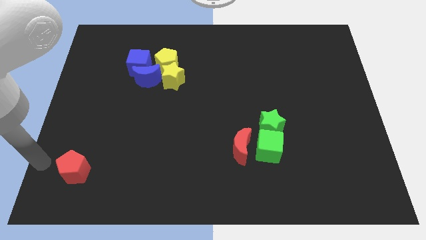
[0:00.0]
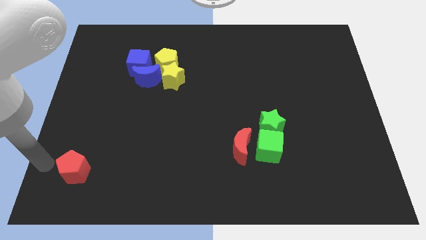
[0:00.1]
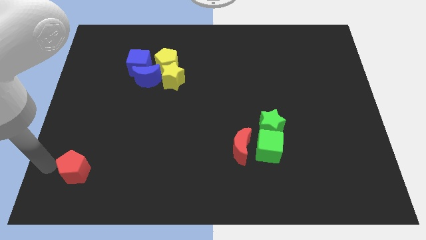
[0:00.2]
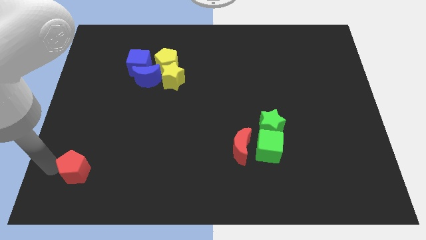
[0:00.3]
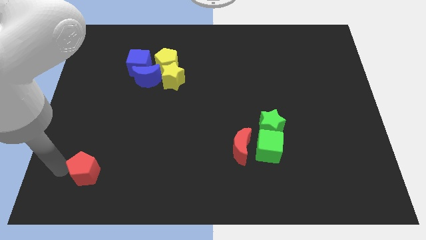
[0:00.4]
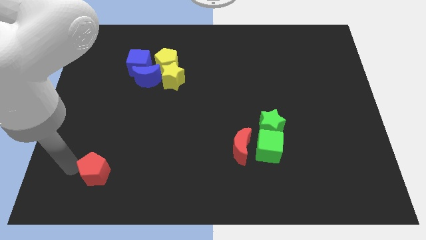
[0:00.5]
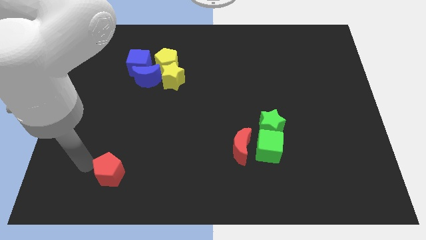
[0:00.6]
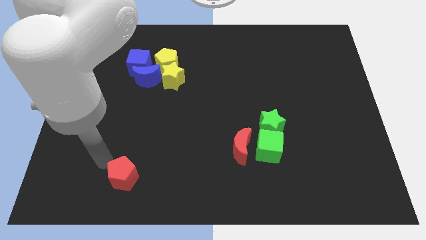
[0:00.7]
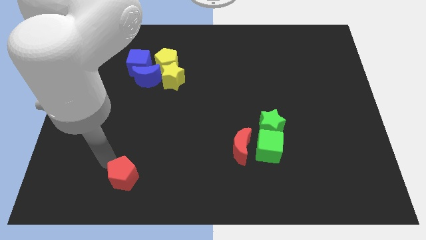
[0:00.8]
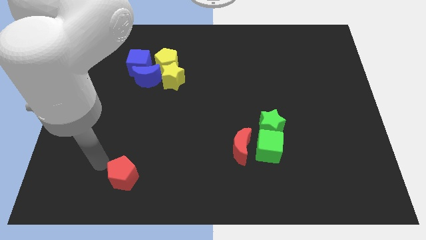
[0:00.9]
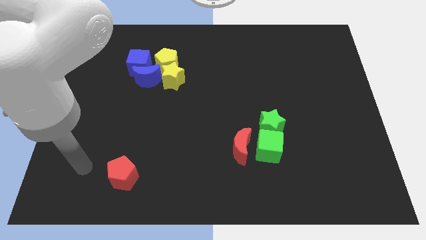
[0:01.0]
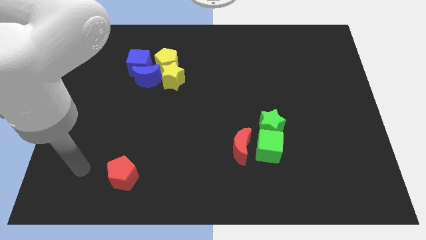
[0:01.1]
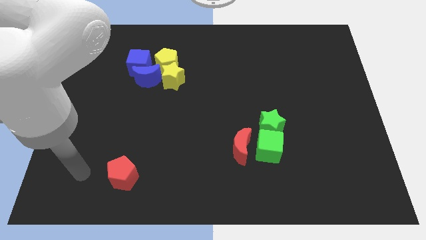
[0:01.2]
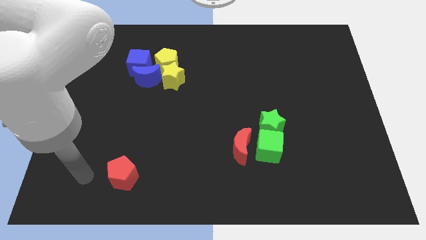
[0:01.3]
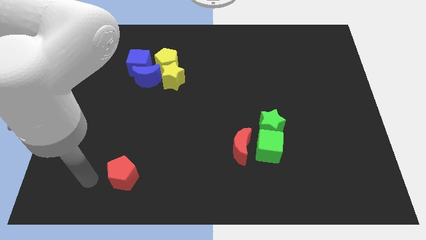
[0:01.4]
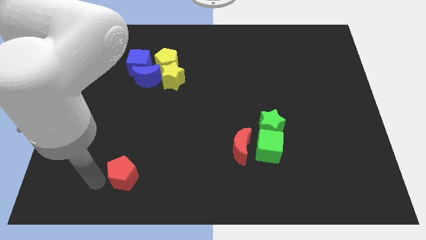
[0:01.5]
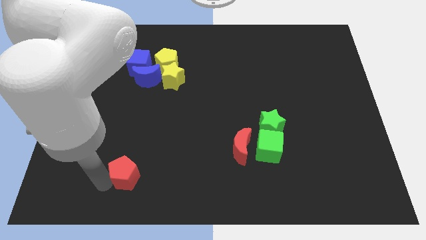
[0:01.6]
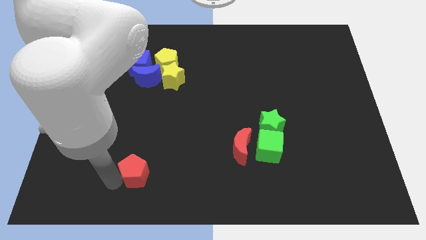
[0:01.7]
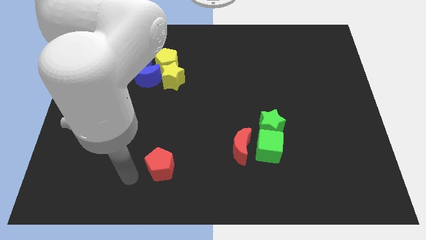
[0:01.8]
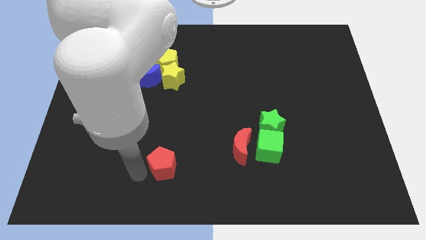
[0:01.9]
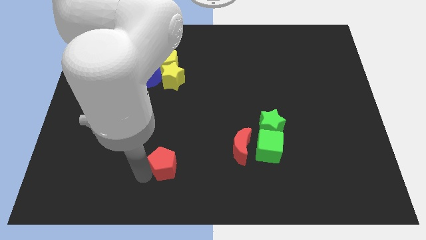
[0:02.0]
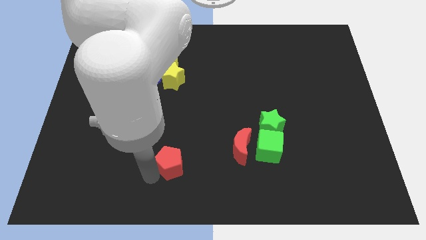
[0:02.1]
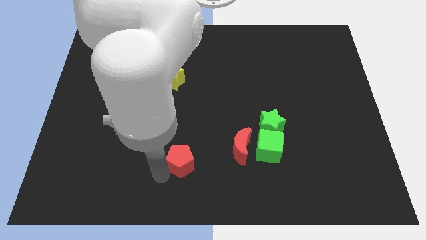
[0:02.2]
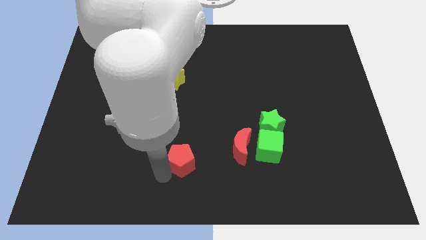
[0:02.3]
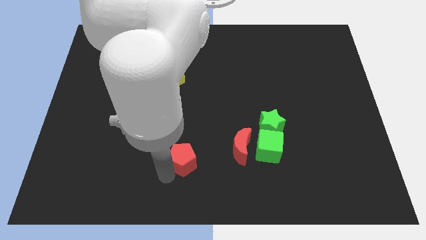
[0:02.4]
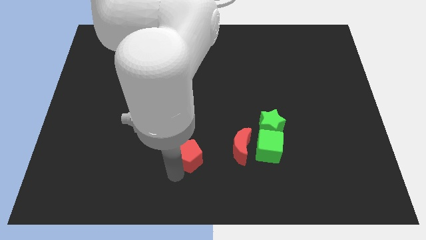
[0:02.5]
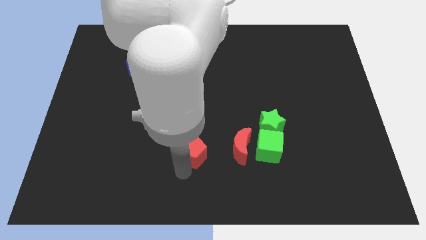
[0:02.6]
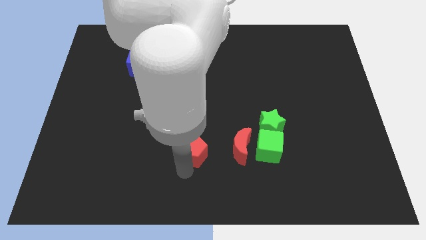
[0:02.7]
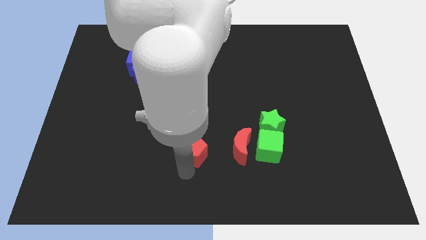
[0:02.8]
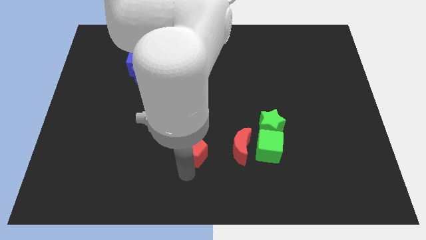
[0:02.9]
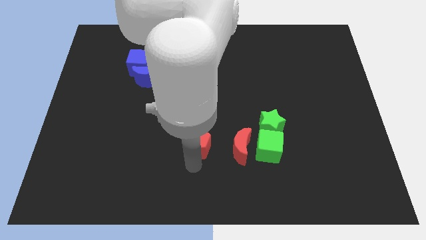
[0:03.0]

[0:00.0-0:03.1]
move the red pentagon to the left side of the red moon

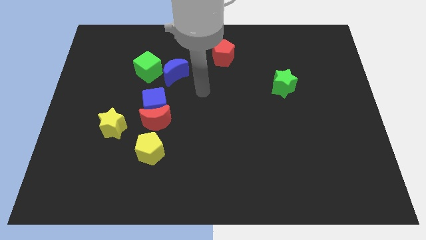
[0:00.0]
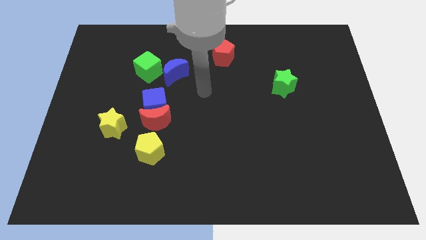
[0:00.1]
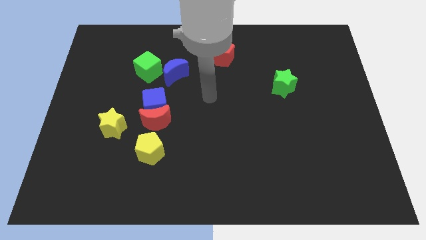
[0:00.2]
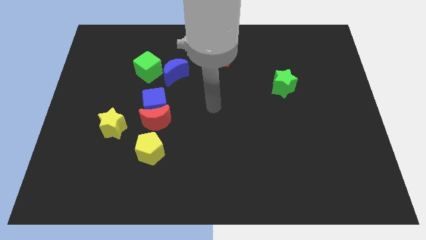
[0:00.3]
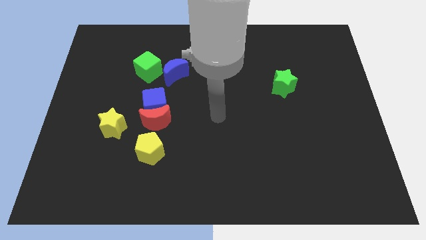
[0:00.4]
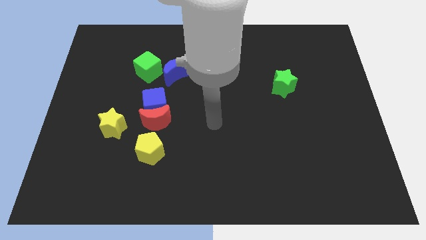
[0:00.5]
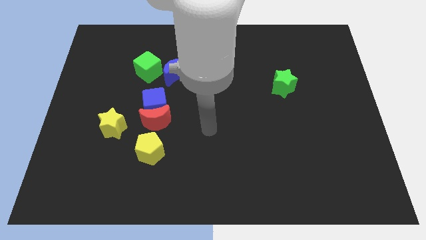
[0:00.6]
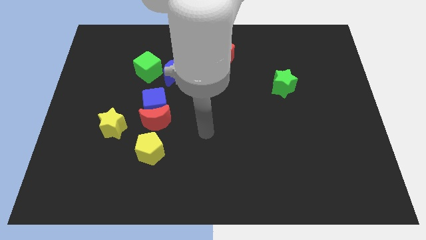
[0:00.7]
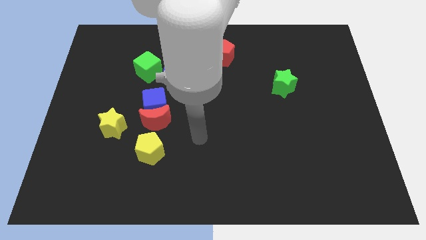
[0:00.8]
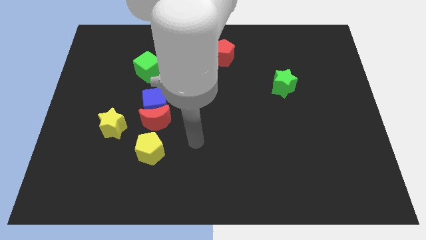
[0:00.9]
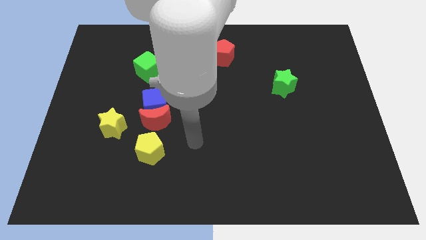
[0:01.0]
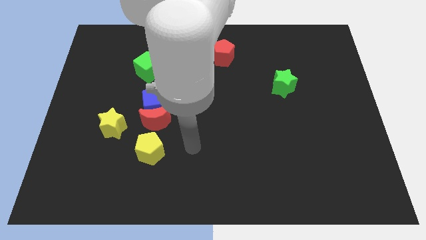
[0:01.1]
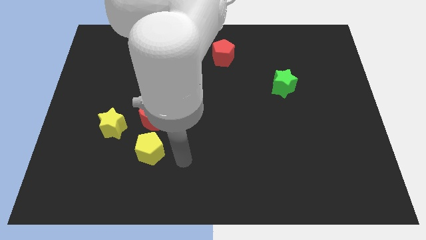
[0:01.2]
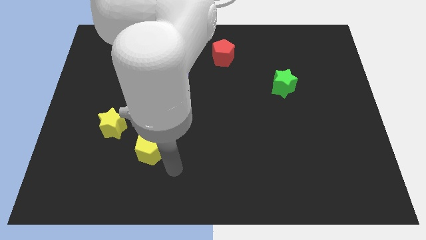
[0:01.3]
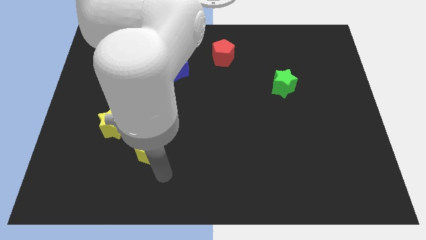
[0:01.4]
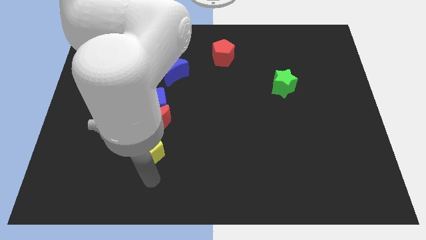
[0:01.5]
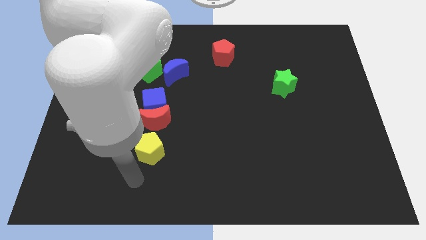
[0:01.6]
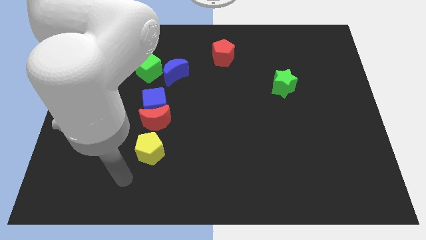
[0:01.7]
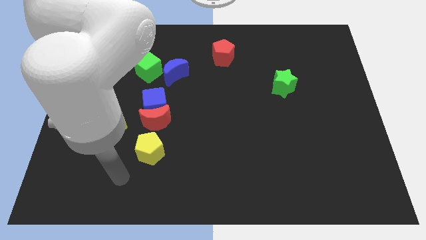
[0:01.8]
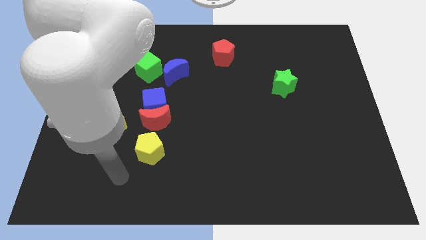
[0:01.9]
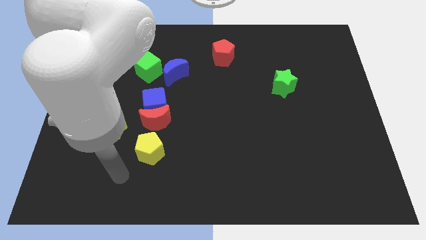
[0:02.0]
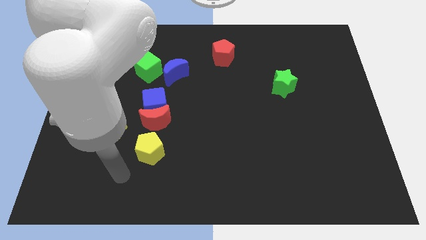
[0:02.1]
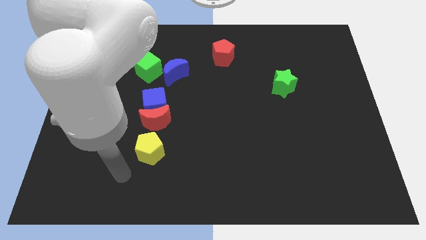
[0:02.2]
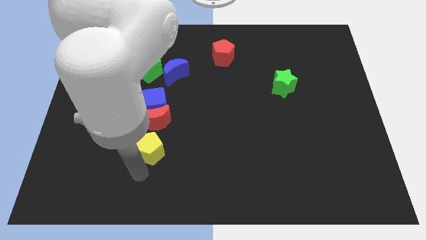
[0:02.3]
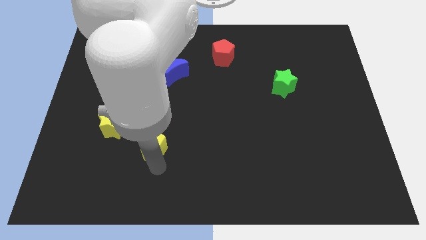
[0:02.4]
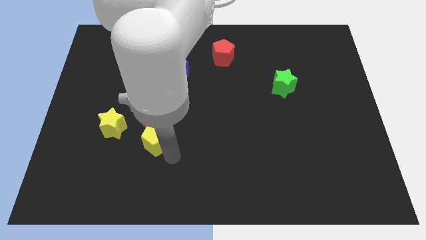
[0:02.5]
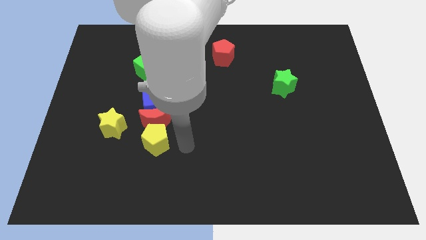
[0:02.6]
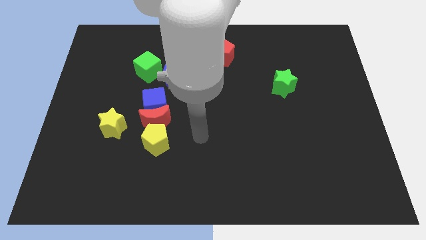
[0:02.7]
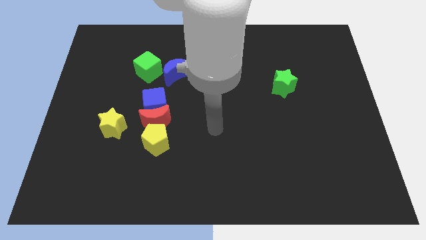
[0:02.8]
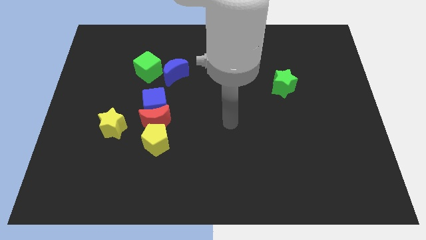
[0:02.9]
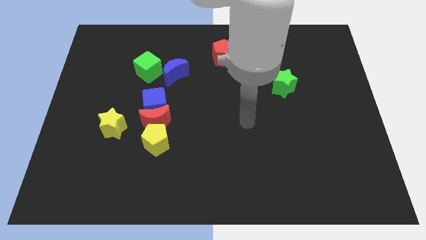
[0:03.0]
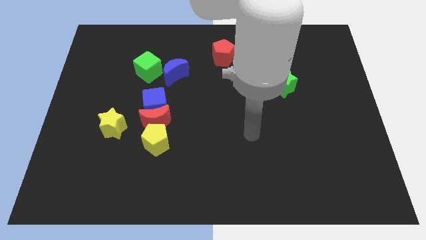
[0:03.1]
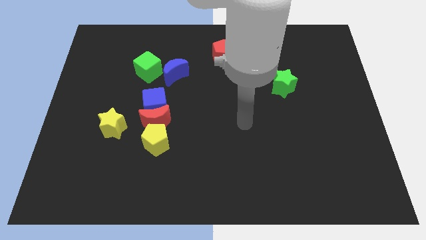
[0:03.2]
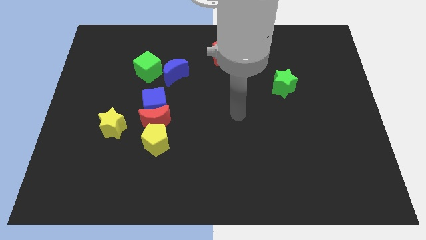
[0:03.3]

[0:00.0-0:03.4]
slide the yellow pentagon up slightly

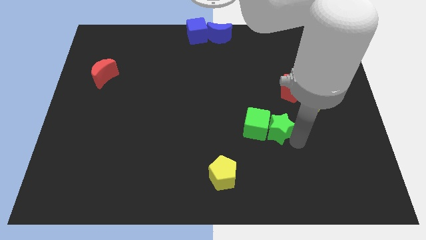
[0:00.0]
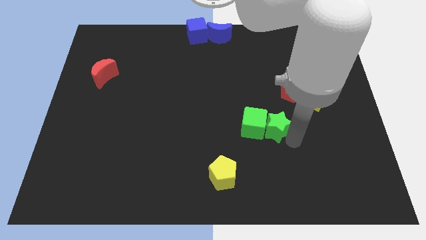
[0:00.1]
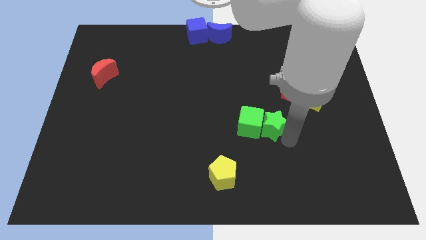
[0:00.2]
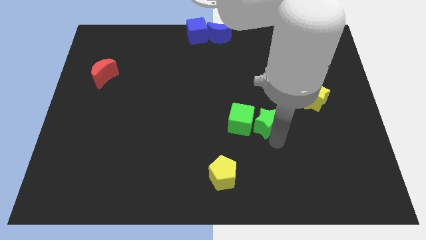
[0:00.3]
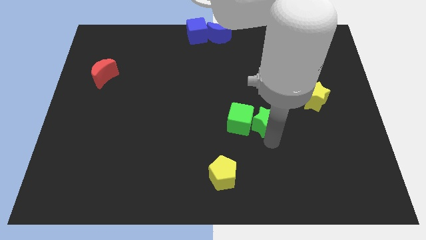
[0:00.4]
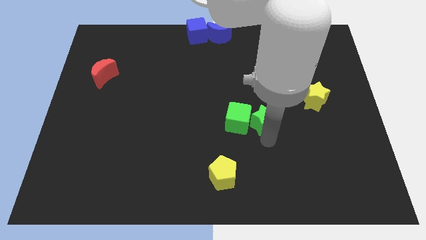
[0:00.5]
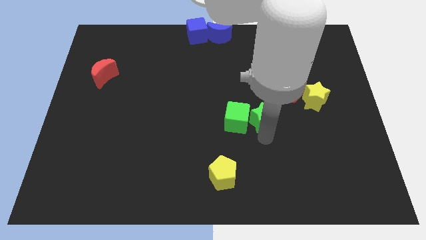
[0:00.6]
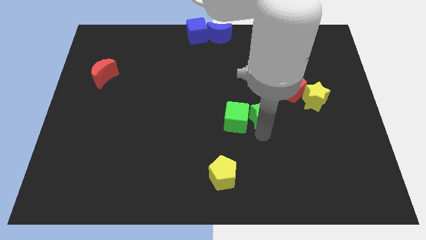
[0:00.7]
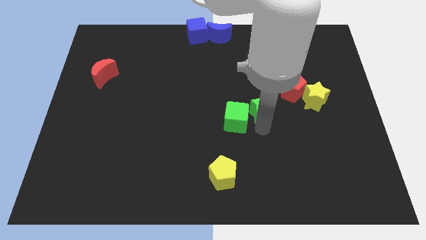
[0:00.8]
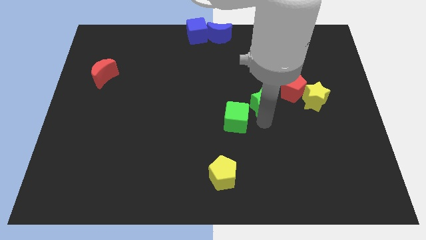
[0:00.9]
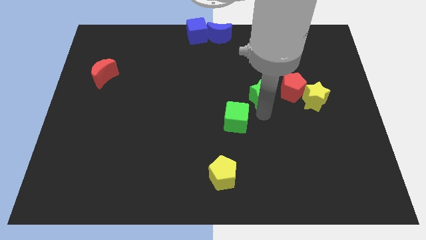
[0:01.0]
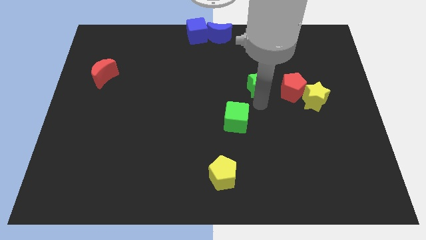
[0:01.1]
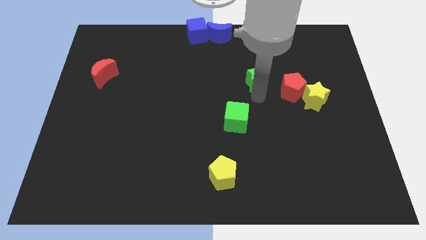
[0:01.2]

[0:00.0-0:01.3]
place the green star left to the red pentagon

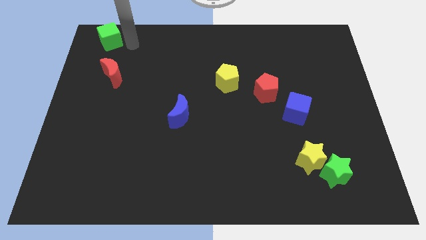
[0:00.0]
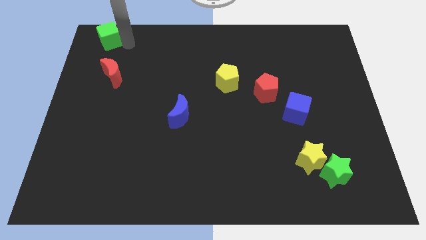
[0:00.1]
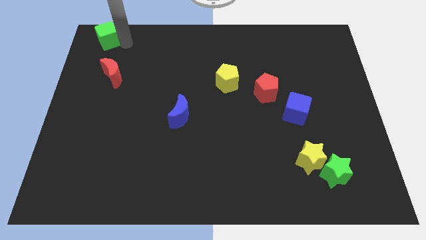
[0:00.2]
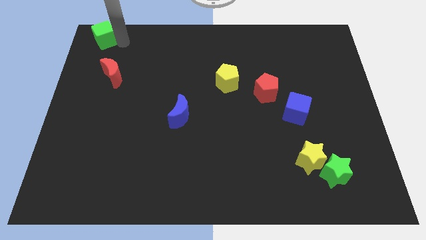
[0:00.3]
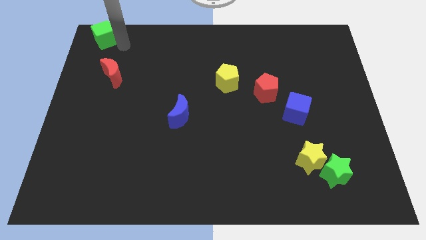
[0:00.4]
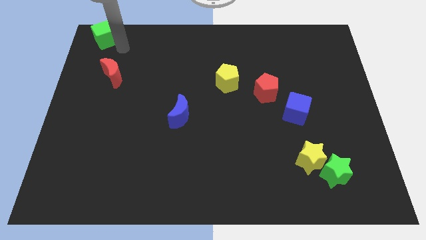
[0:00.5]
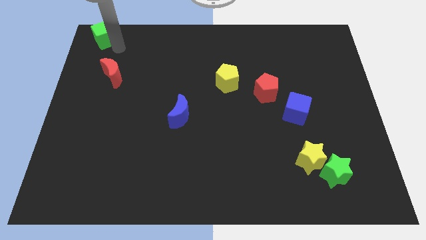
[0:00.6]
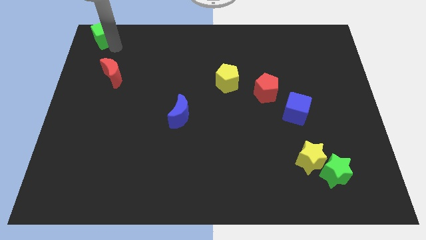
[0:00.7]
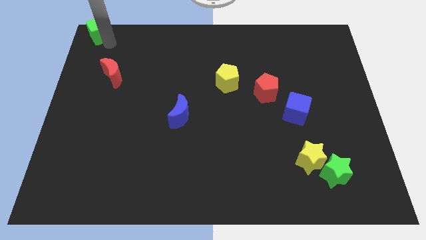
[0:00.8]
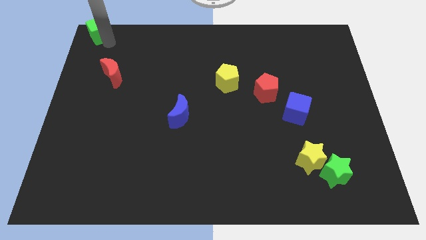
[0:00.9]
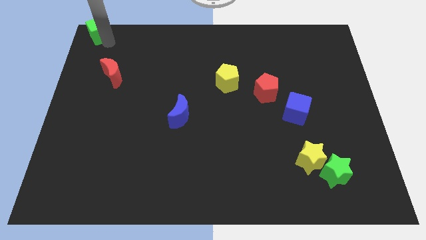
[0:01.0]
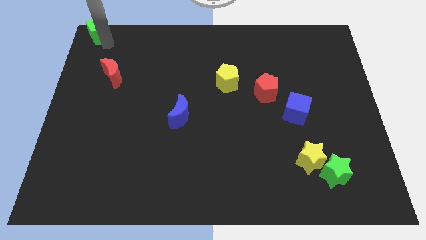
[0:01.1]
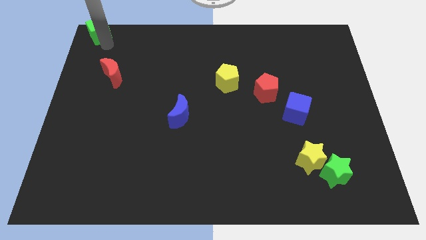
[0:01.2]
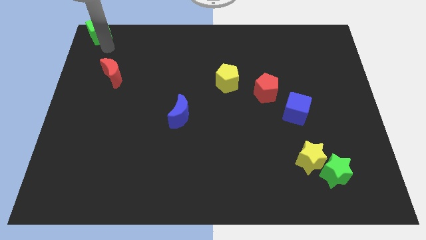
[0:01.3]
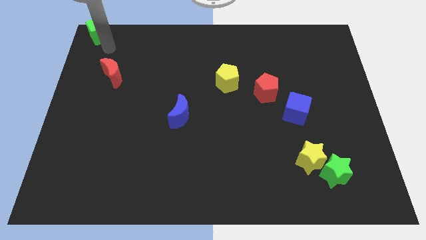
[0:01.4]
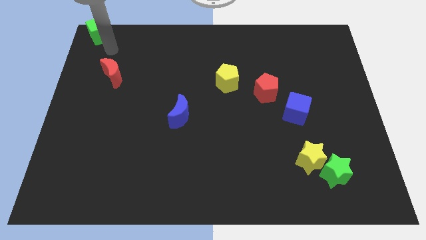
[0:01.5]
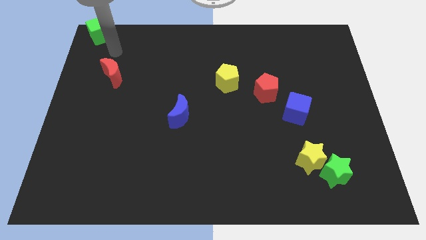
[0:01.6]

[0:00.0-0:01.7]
push green cube to the left top corner of the board
